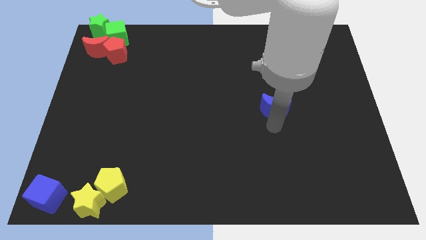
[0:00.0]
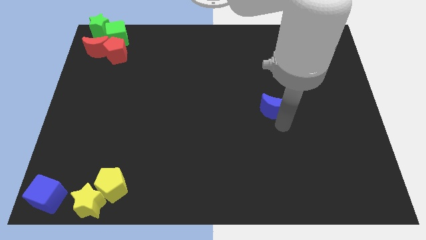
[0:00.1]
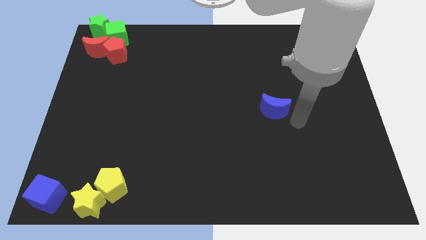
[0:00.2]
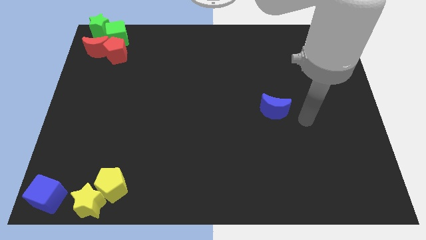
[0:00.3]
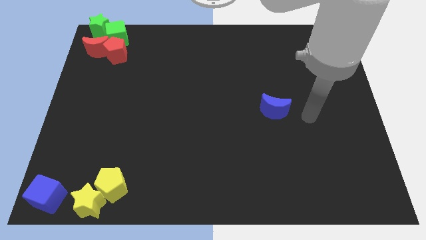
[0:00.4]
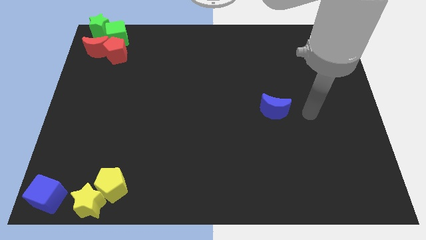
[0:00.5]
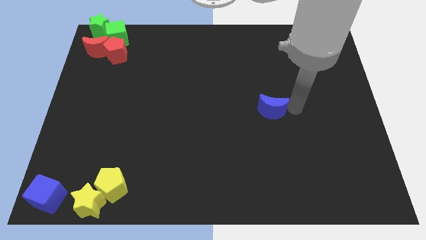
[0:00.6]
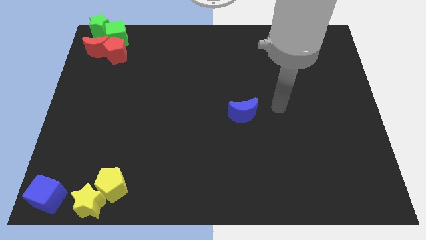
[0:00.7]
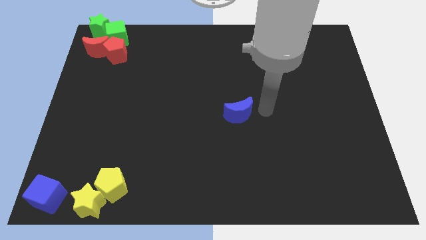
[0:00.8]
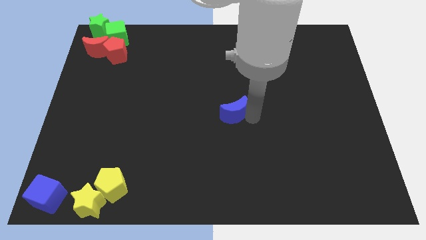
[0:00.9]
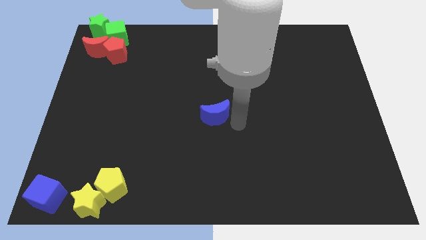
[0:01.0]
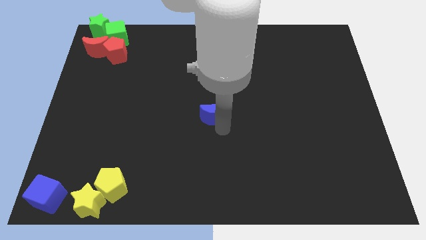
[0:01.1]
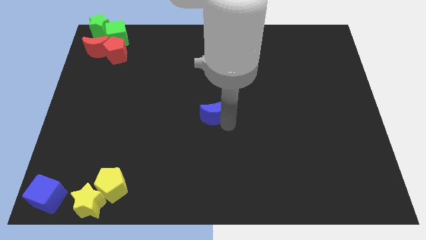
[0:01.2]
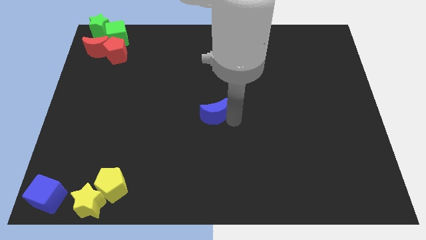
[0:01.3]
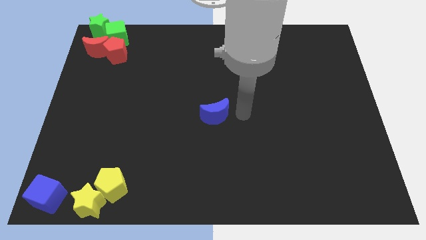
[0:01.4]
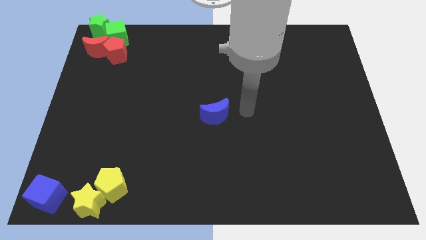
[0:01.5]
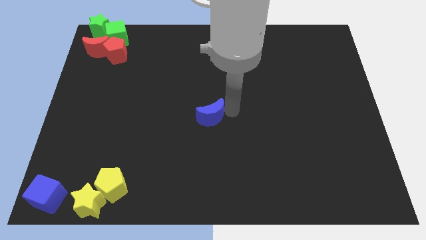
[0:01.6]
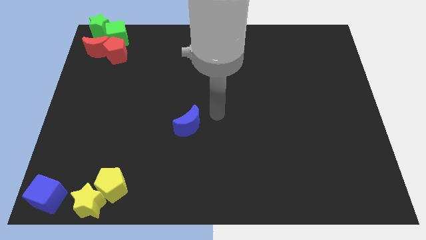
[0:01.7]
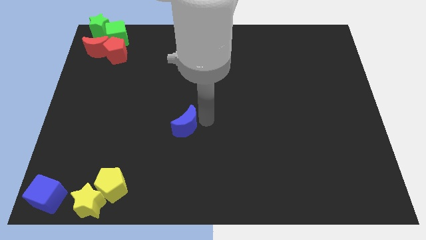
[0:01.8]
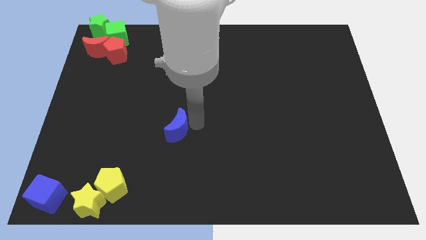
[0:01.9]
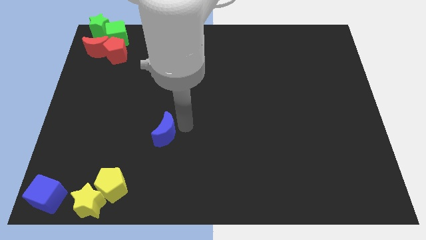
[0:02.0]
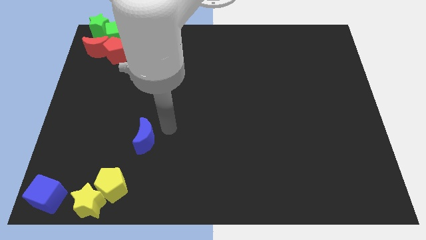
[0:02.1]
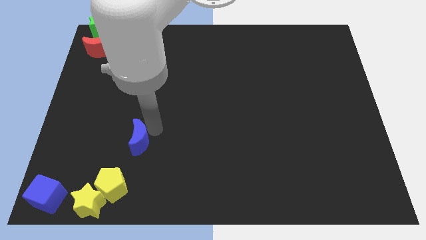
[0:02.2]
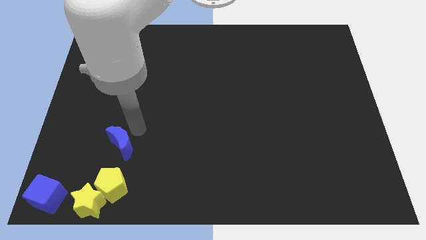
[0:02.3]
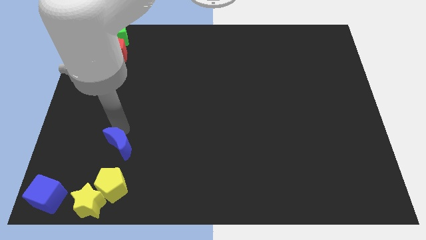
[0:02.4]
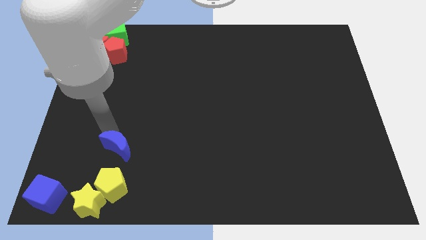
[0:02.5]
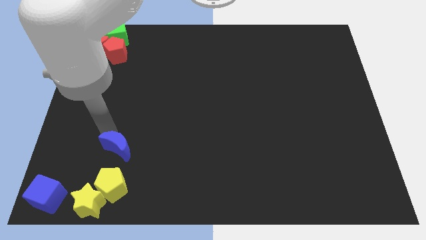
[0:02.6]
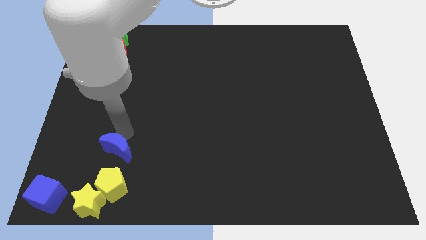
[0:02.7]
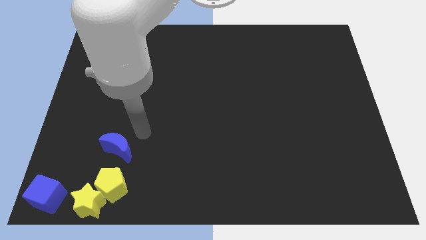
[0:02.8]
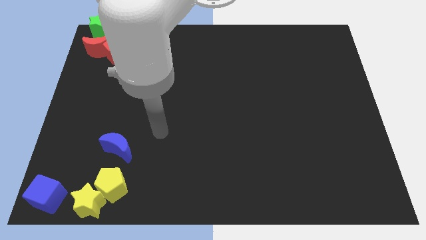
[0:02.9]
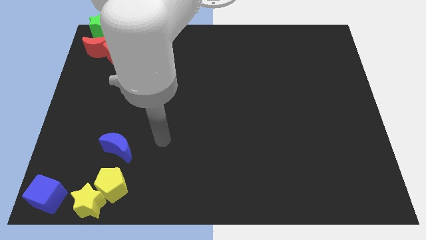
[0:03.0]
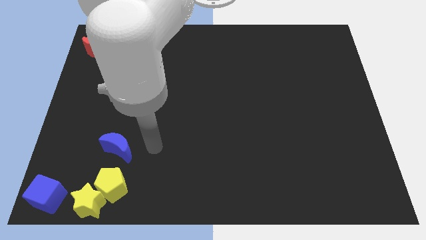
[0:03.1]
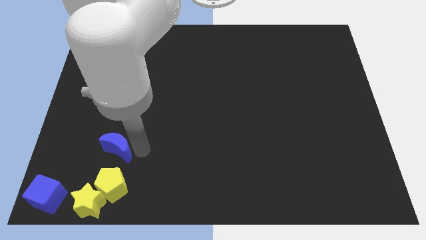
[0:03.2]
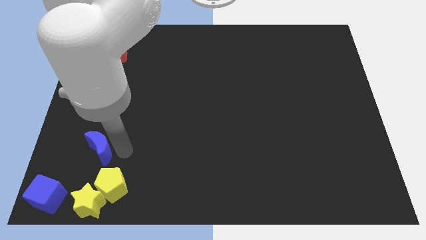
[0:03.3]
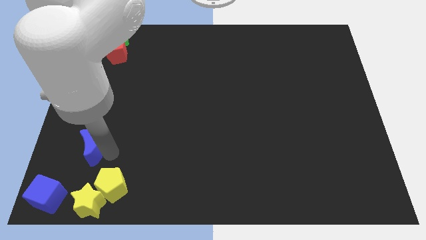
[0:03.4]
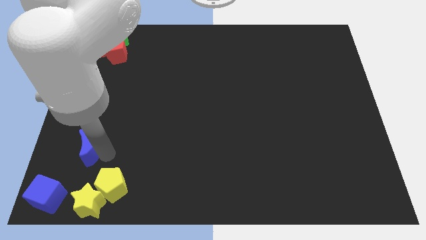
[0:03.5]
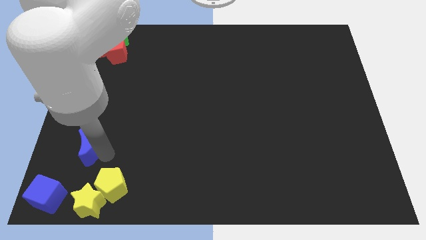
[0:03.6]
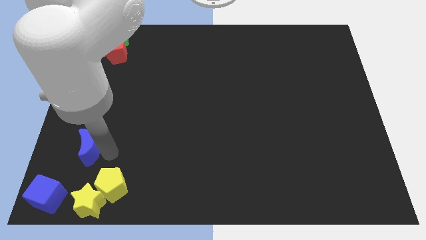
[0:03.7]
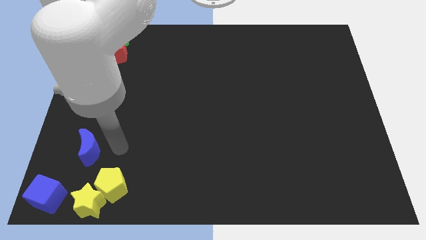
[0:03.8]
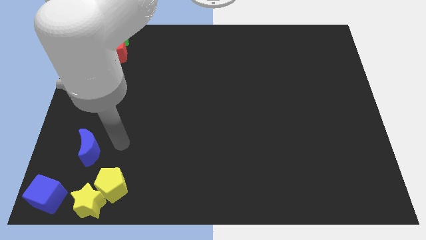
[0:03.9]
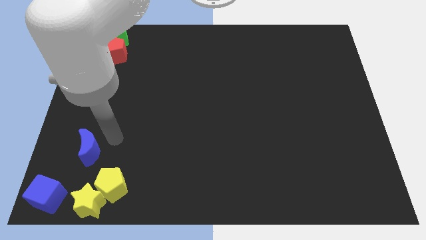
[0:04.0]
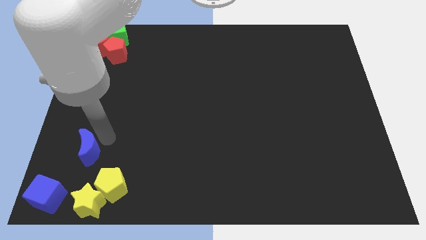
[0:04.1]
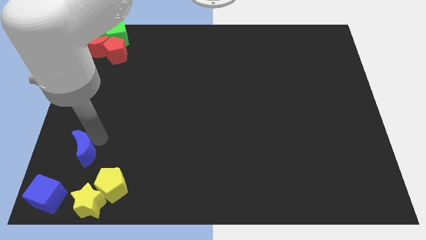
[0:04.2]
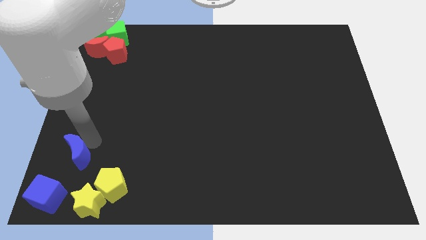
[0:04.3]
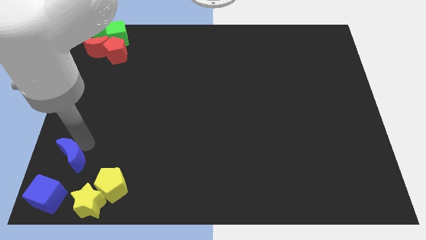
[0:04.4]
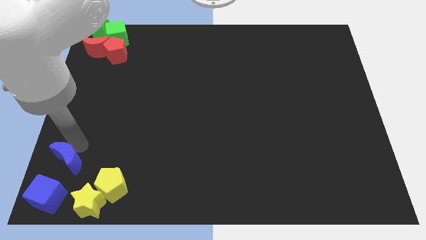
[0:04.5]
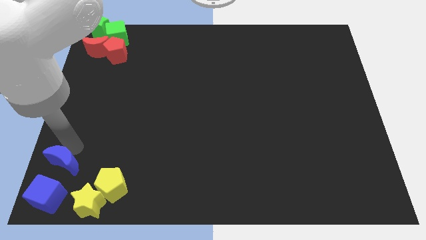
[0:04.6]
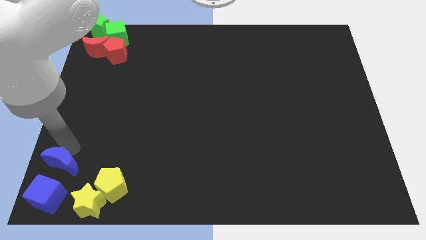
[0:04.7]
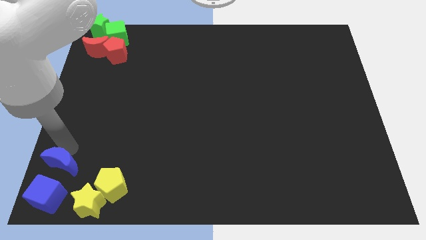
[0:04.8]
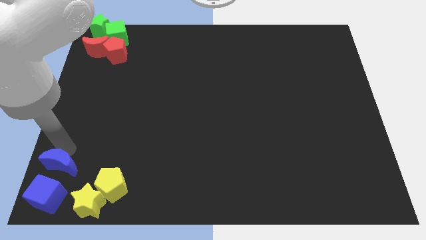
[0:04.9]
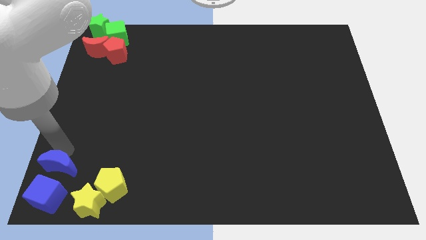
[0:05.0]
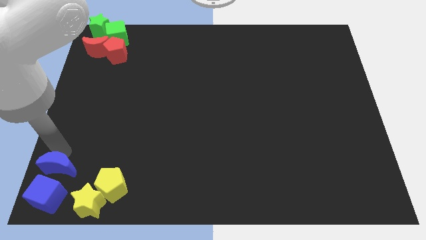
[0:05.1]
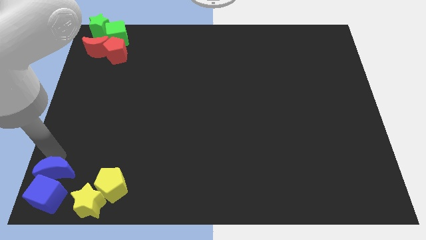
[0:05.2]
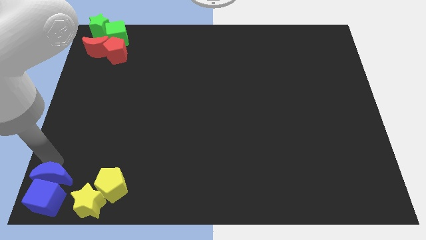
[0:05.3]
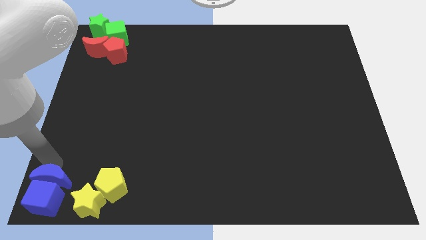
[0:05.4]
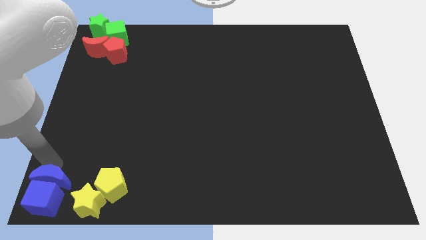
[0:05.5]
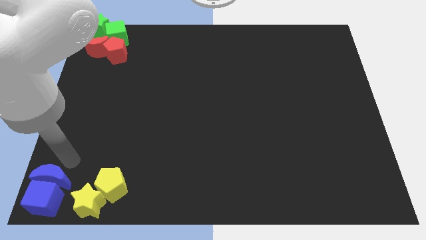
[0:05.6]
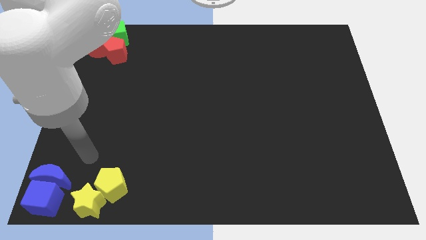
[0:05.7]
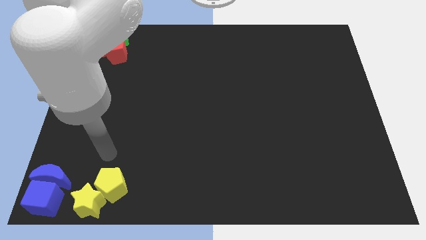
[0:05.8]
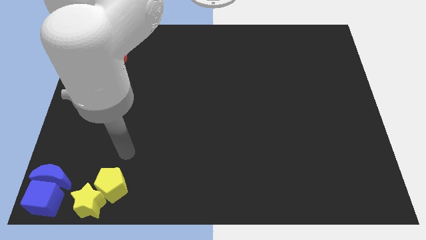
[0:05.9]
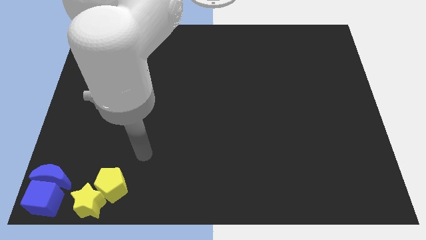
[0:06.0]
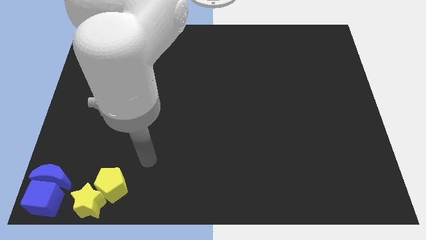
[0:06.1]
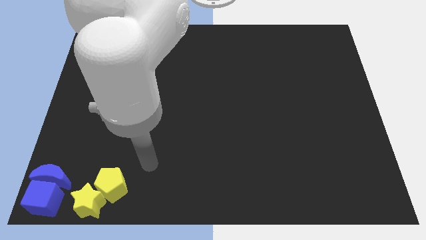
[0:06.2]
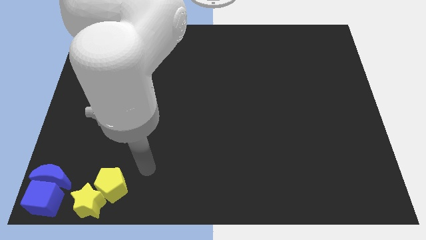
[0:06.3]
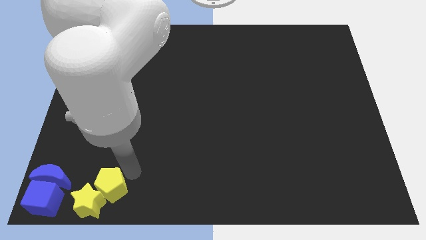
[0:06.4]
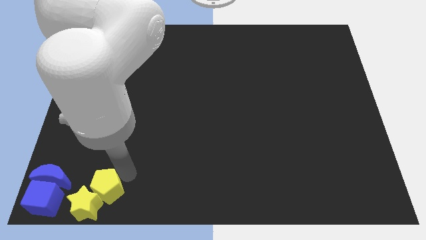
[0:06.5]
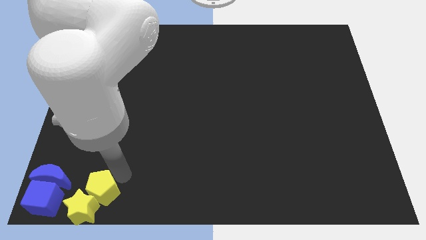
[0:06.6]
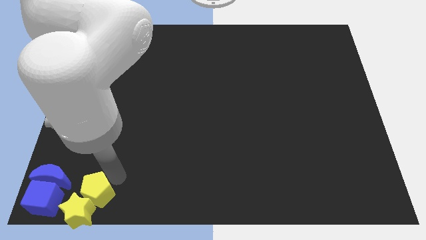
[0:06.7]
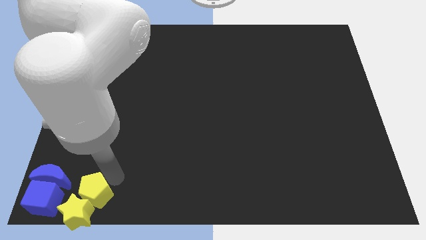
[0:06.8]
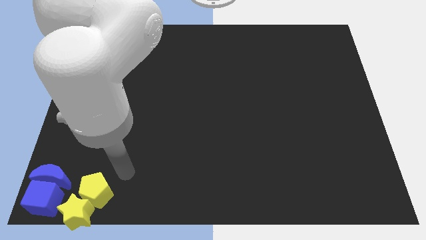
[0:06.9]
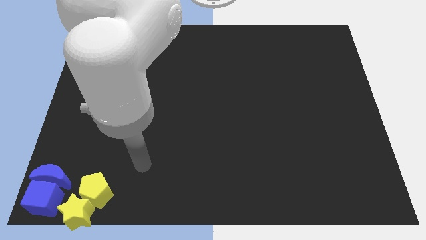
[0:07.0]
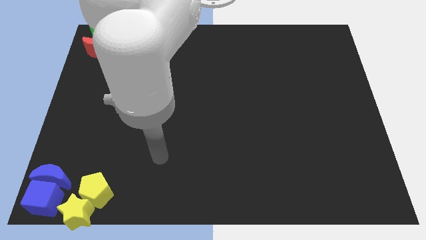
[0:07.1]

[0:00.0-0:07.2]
add blue moon into blue blue cube

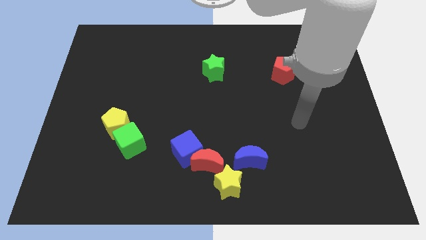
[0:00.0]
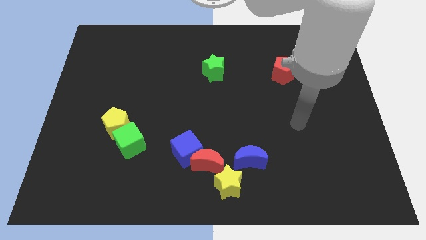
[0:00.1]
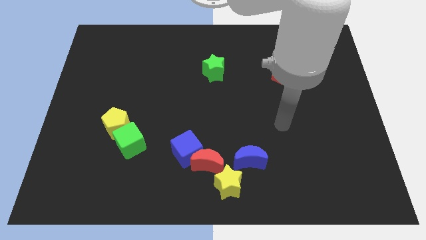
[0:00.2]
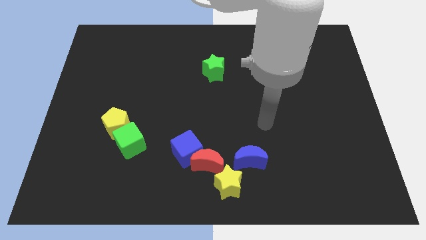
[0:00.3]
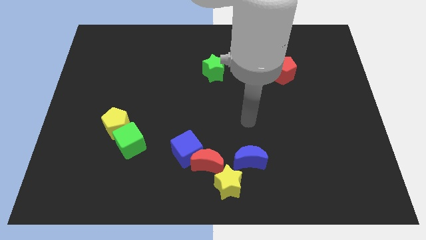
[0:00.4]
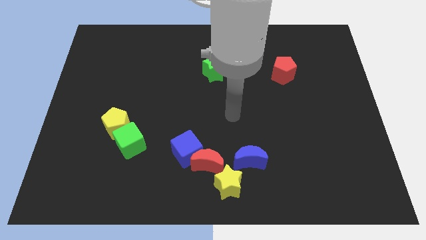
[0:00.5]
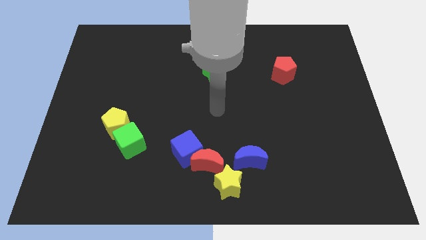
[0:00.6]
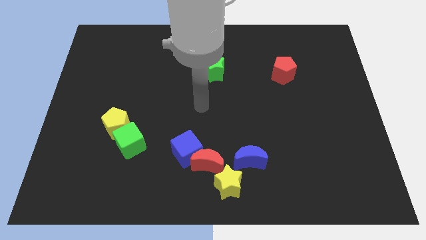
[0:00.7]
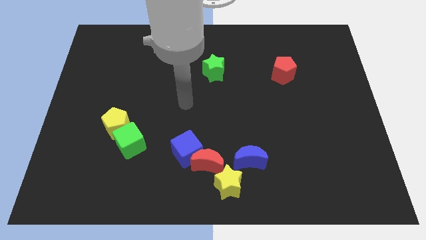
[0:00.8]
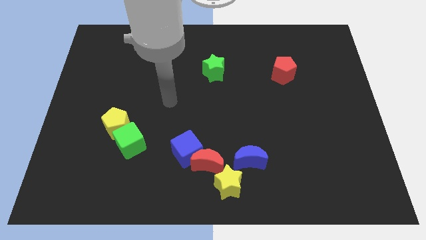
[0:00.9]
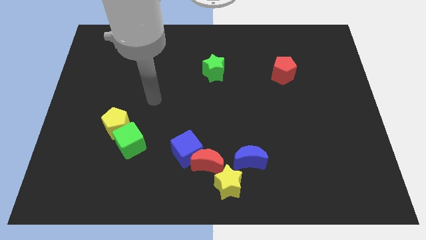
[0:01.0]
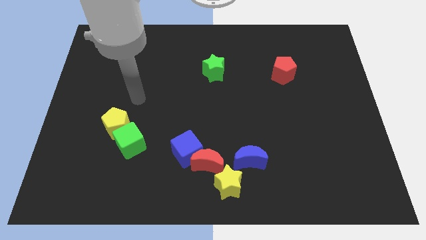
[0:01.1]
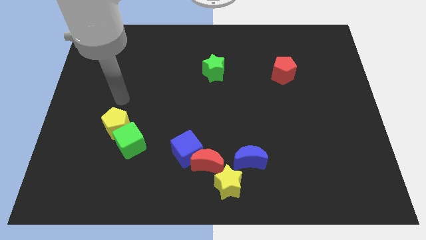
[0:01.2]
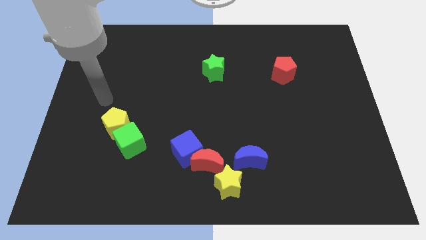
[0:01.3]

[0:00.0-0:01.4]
point your arm to the top side of the yellow pentagon

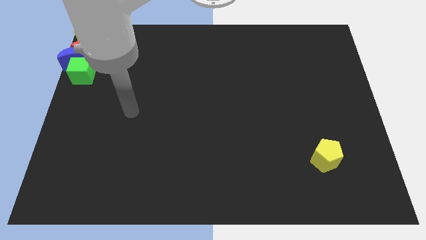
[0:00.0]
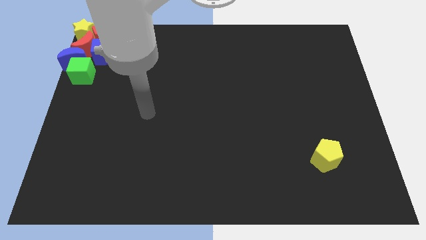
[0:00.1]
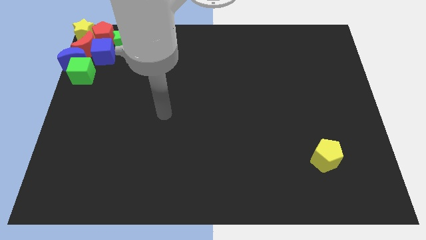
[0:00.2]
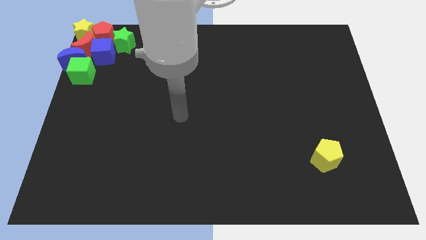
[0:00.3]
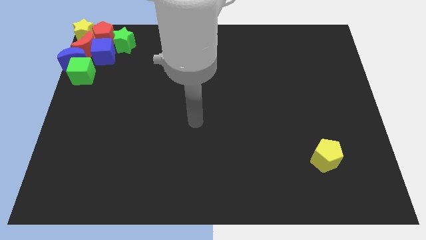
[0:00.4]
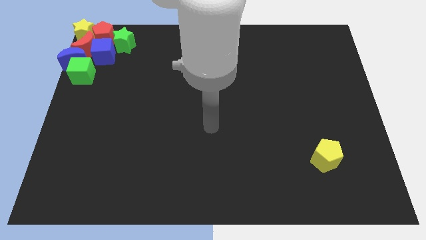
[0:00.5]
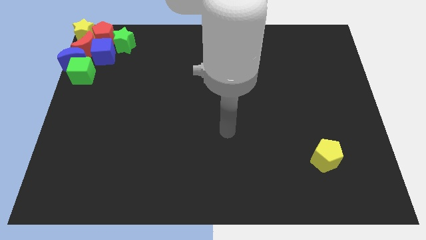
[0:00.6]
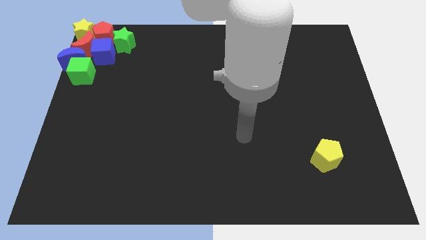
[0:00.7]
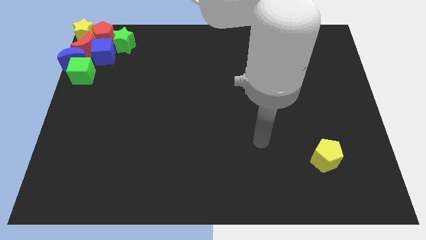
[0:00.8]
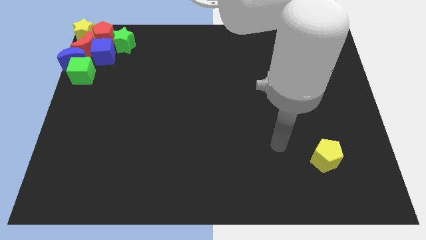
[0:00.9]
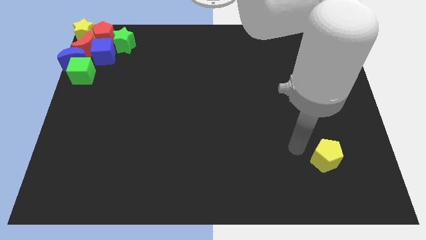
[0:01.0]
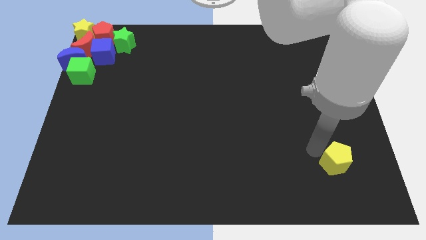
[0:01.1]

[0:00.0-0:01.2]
point your arm at the left of the yellow pentagon
